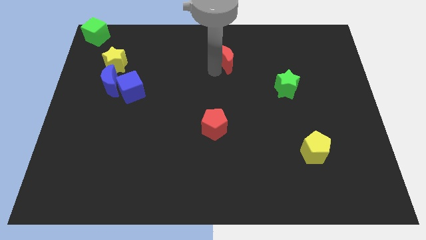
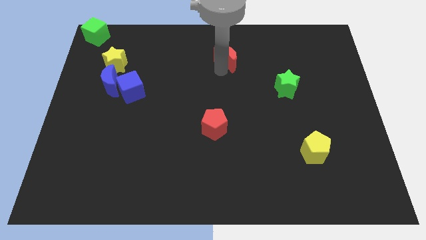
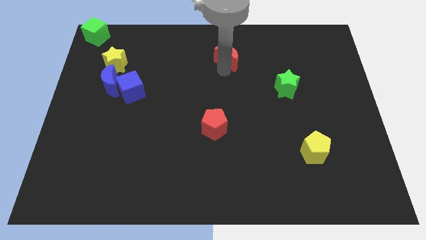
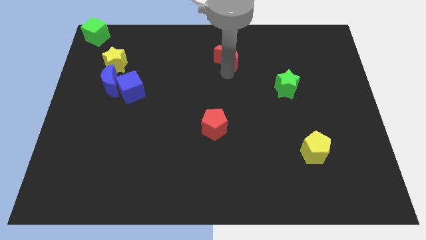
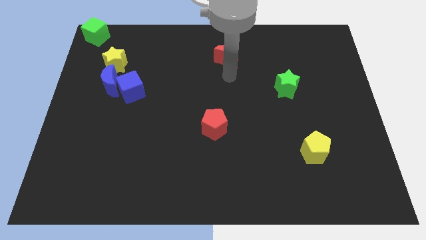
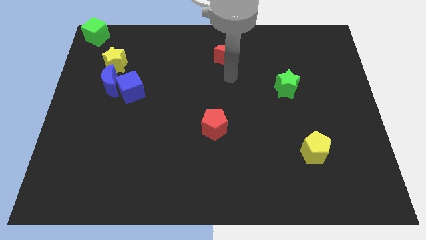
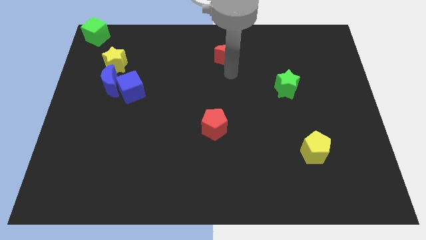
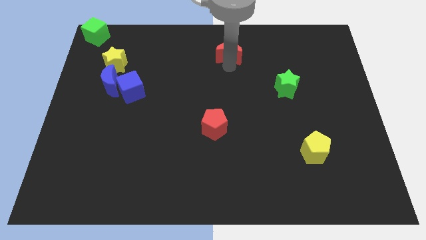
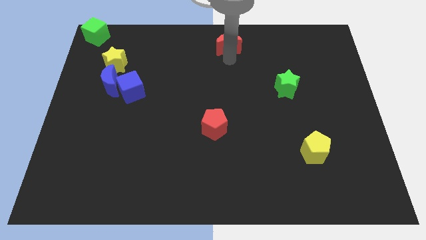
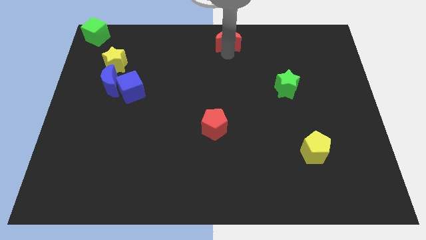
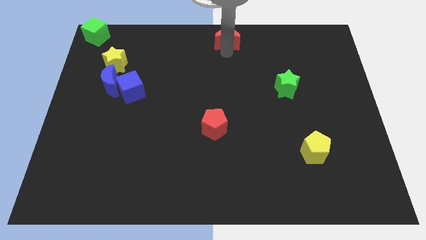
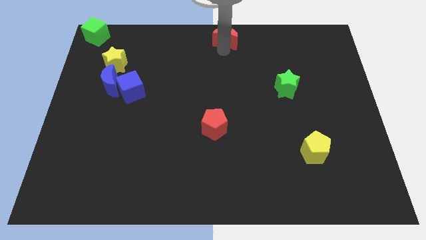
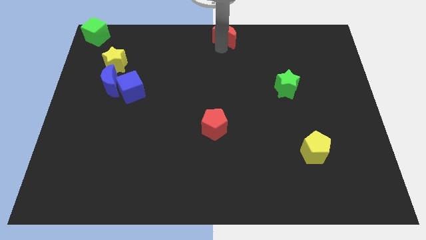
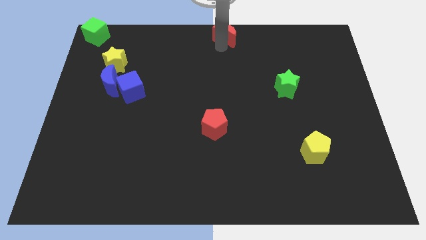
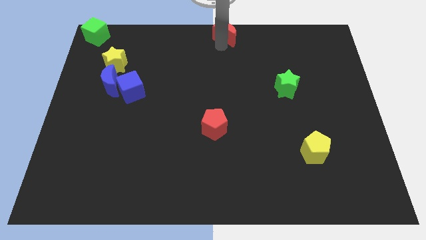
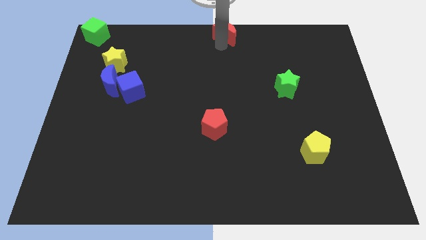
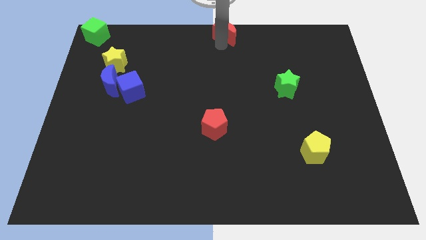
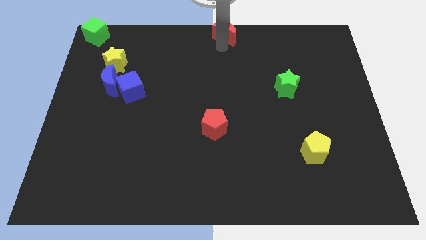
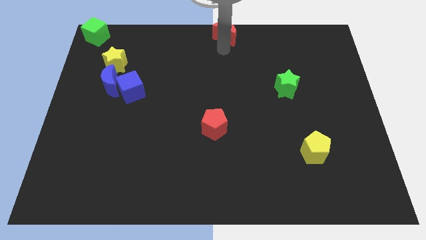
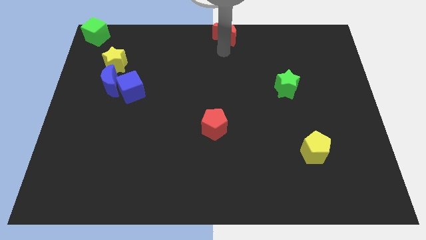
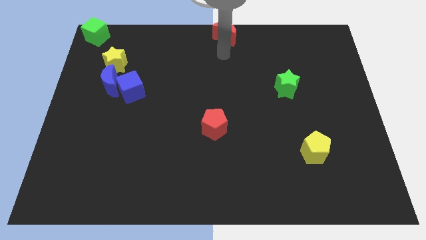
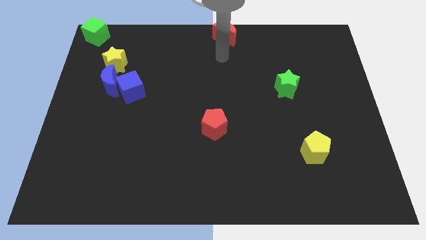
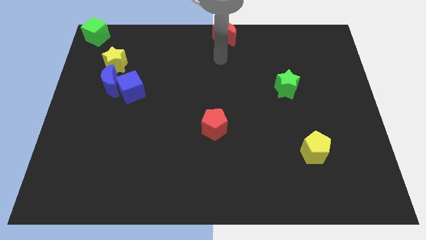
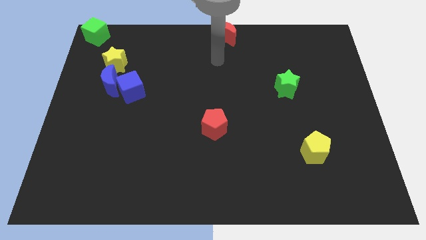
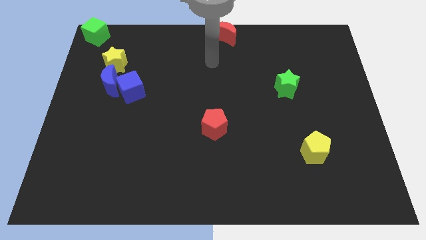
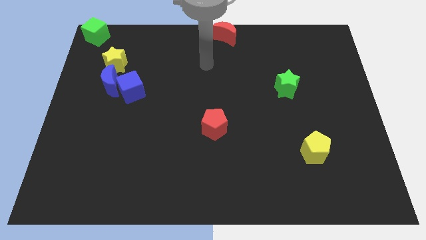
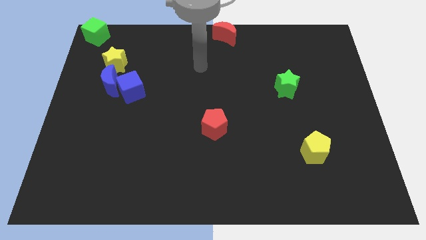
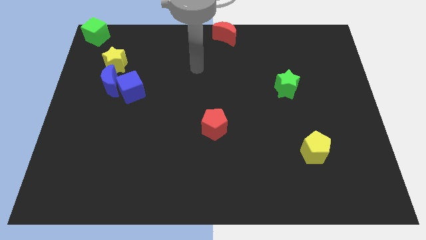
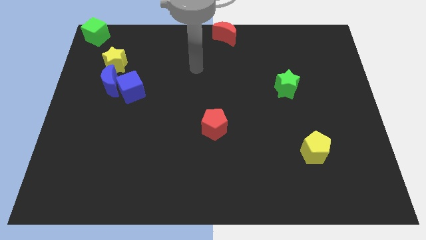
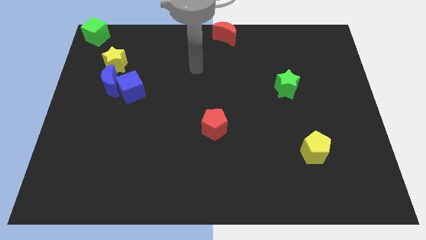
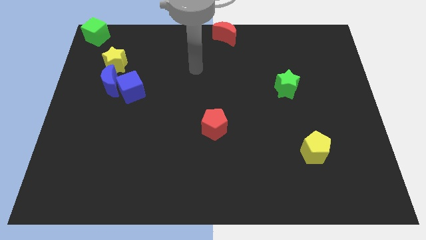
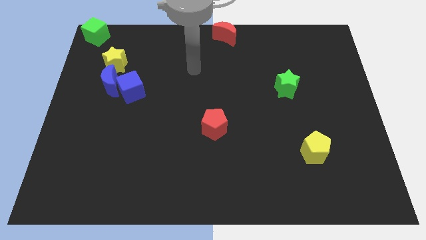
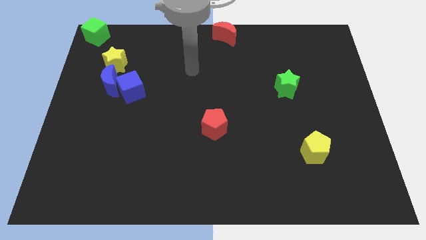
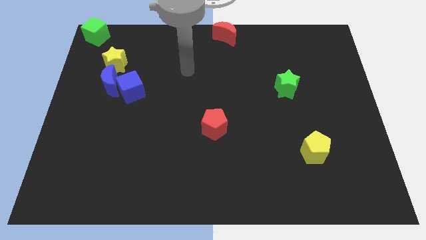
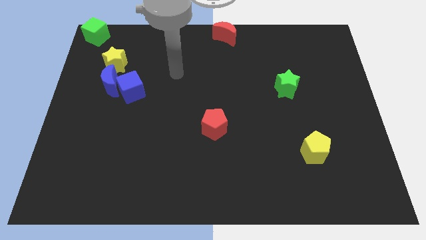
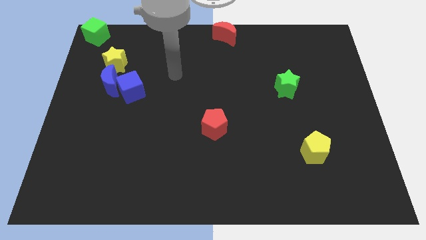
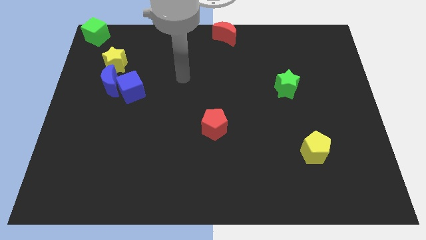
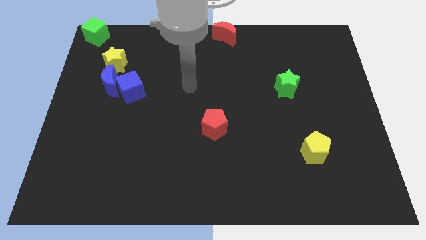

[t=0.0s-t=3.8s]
move the red crescent to the top center of the board

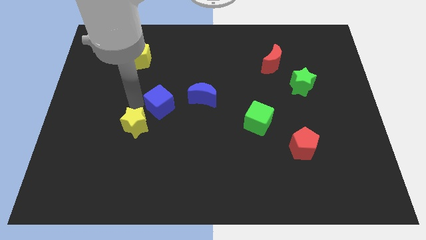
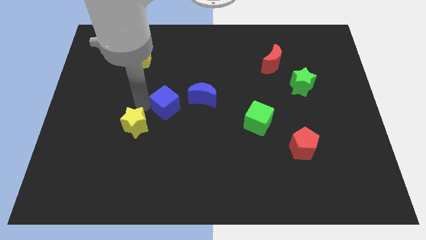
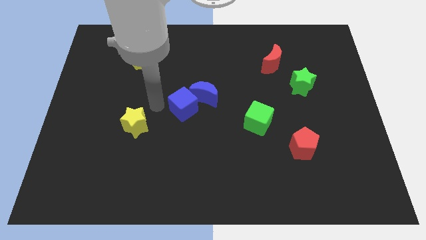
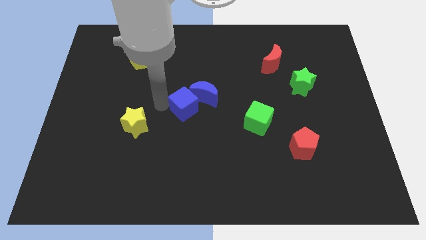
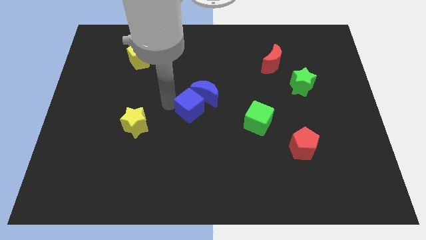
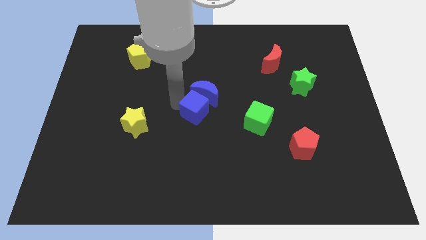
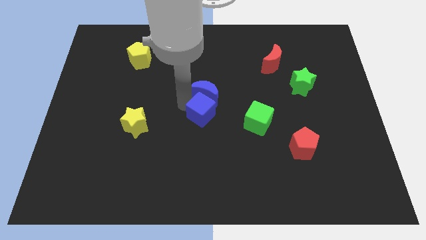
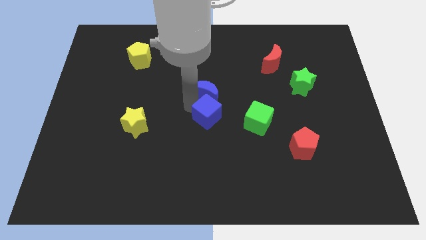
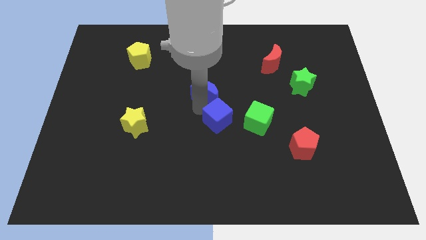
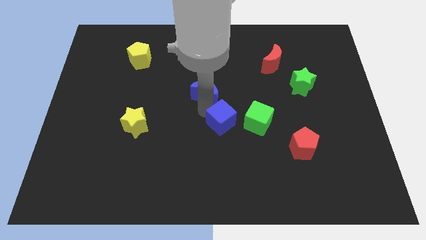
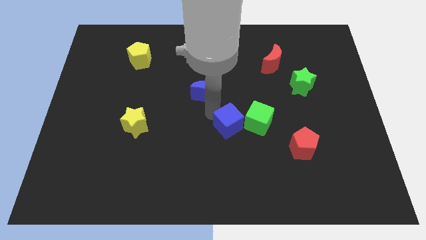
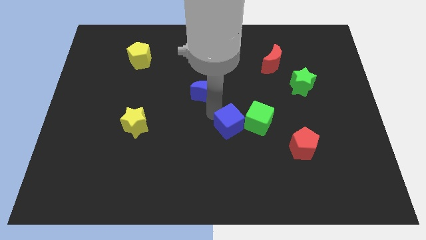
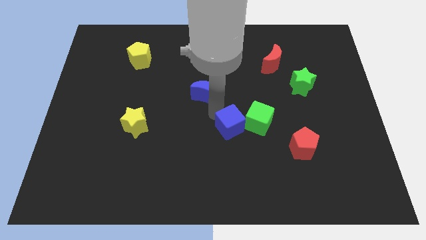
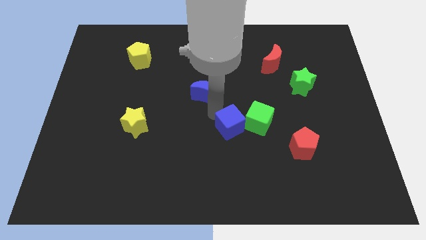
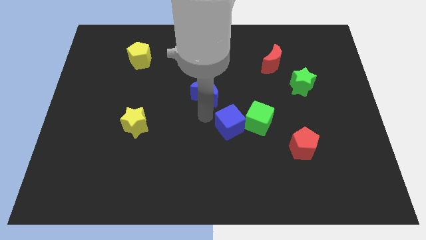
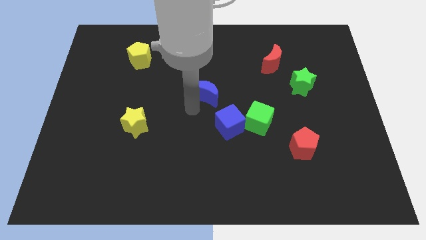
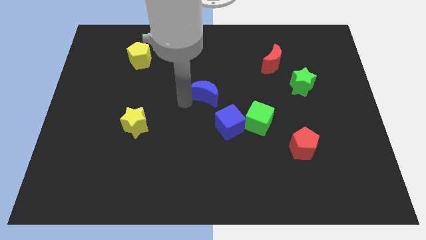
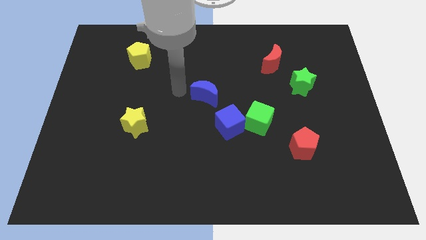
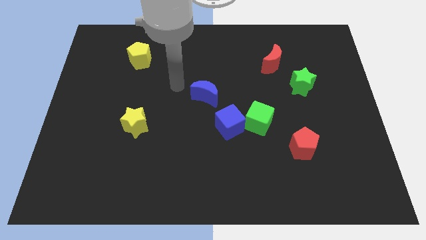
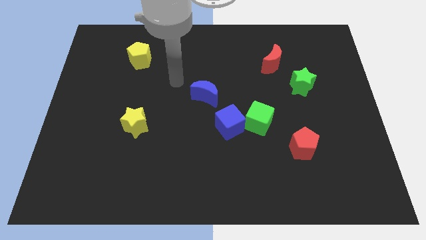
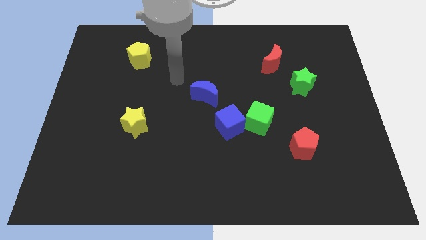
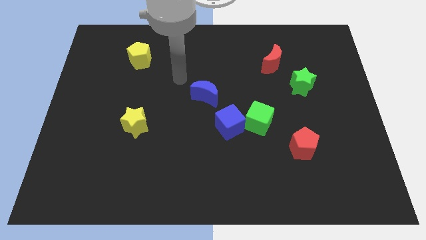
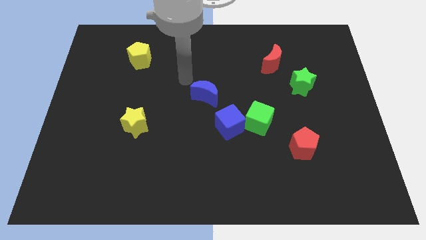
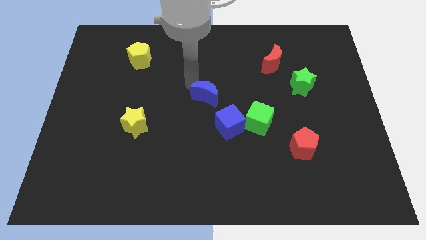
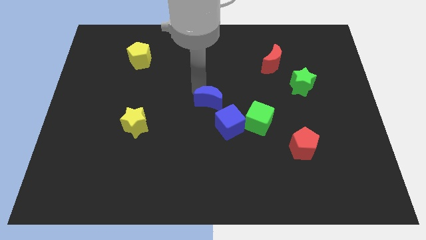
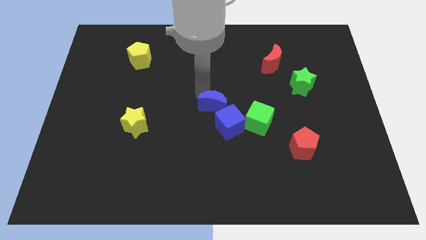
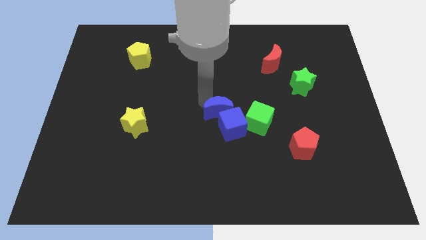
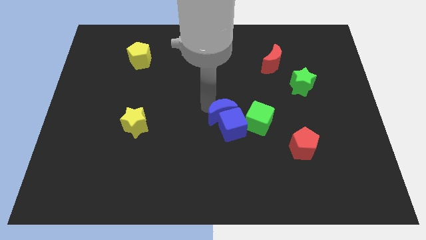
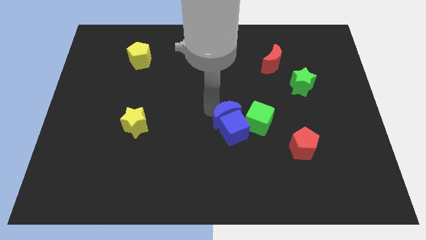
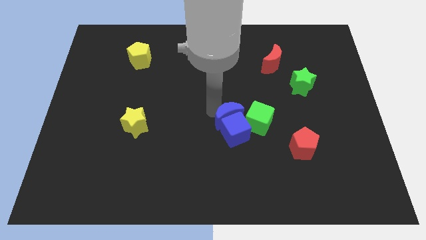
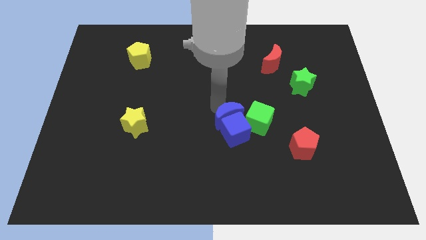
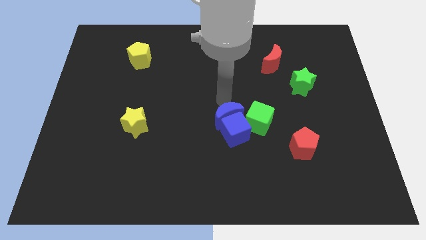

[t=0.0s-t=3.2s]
move the blue moon into the blue cube

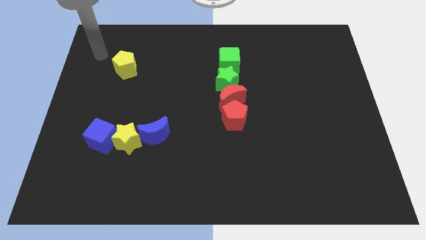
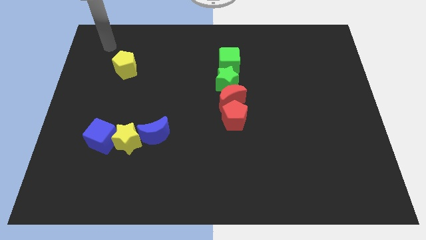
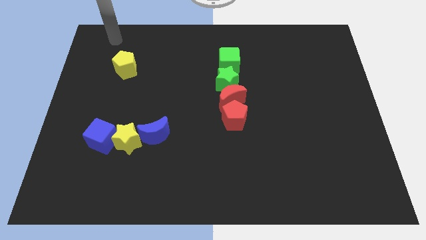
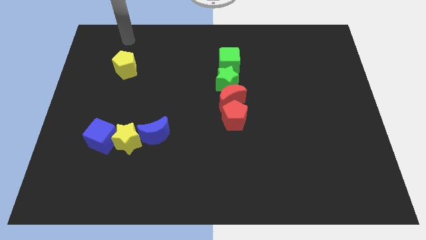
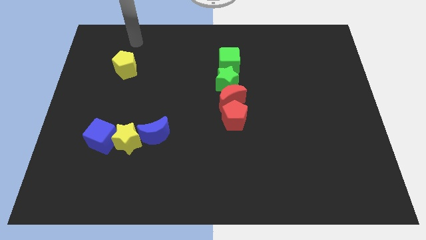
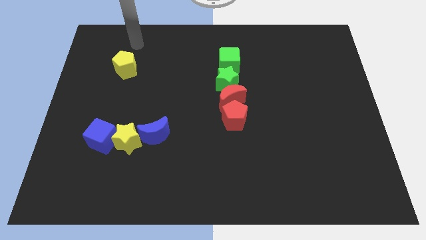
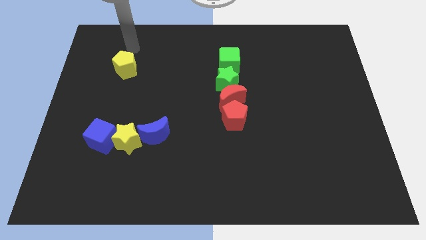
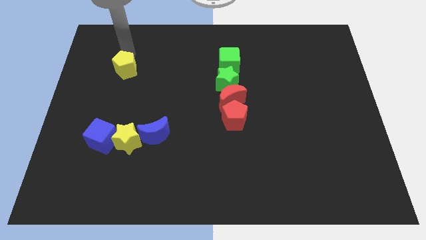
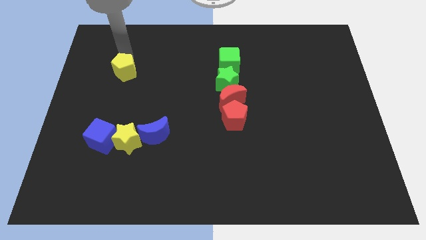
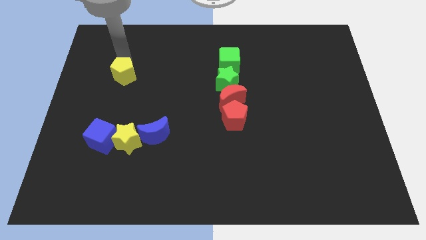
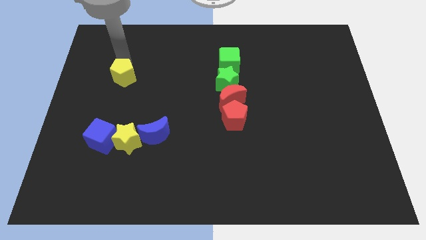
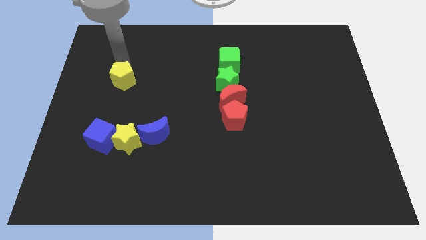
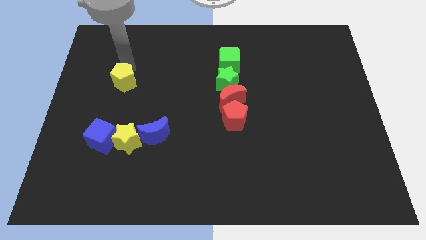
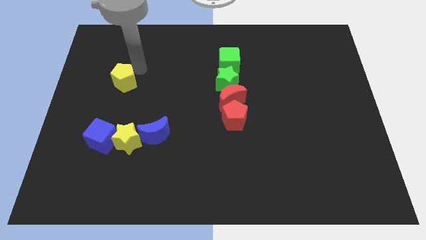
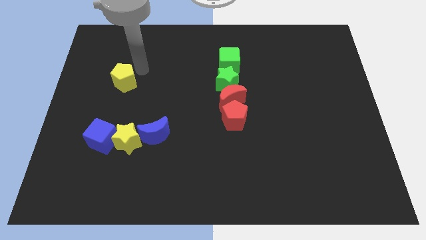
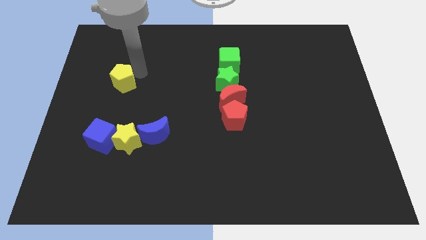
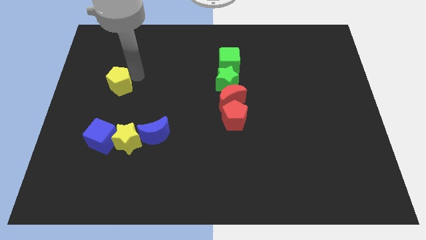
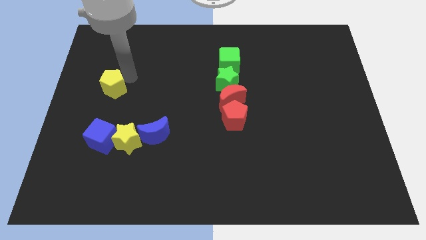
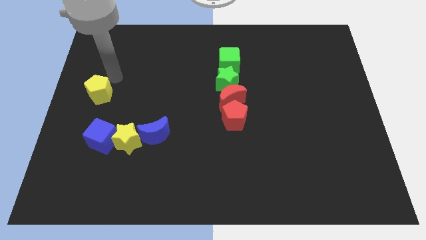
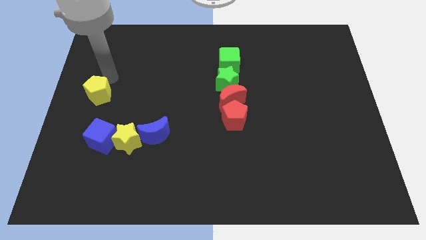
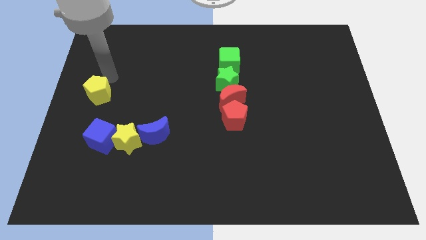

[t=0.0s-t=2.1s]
drag the yellow pentagon towards the center left side of the board
